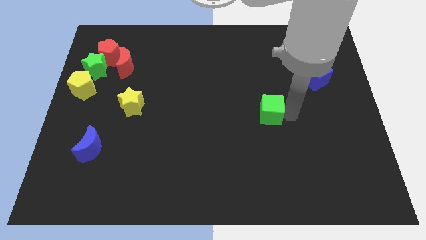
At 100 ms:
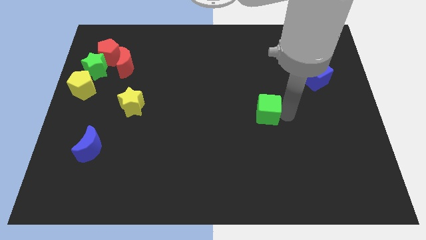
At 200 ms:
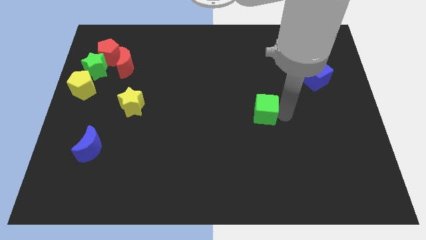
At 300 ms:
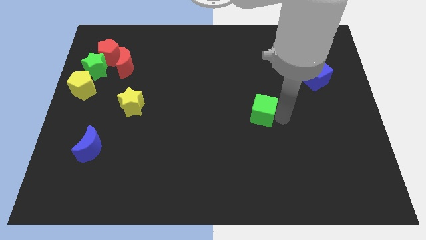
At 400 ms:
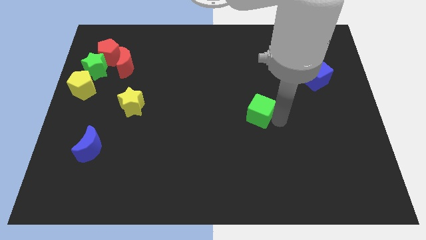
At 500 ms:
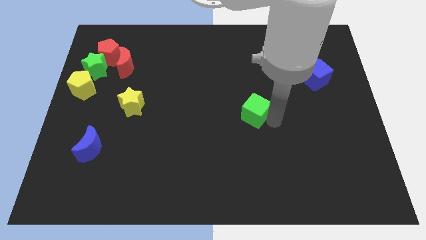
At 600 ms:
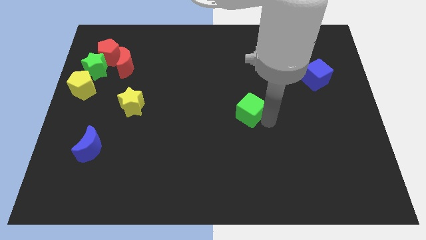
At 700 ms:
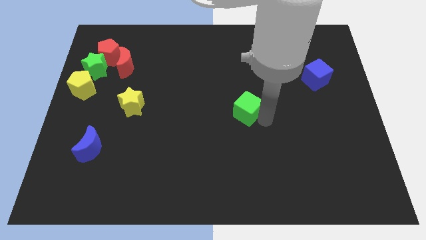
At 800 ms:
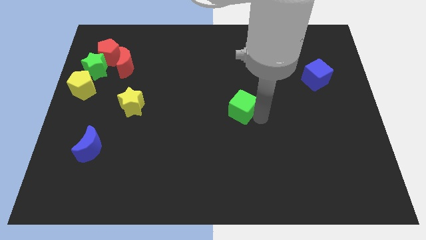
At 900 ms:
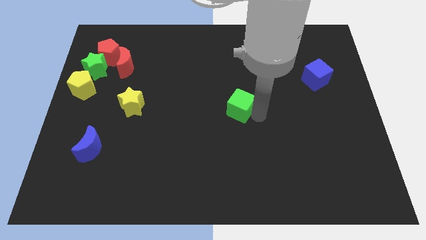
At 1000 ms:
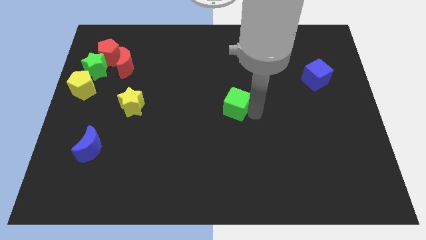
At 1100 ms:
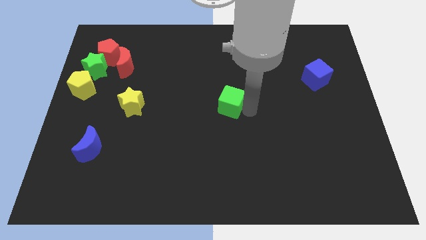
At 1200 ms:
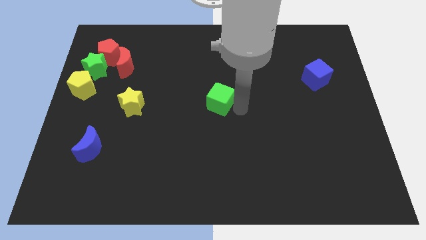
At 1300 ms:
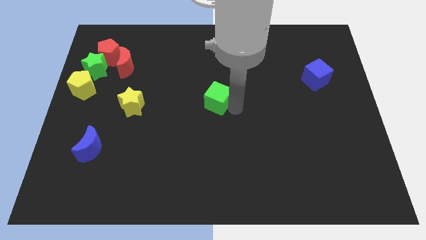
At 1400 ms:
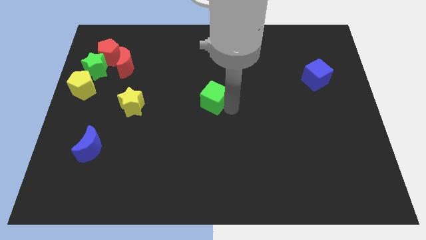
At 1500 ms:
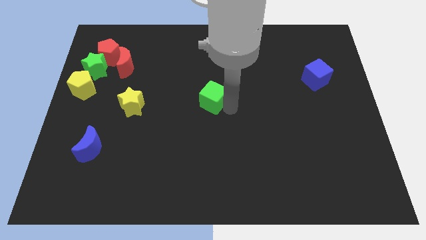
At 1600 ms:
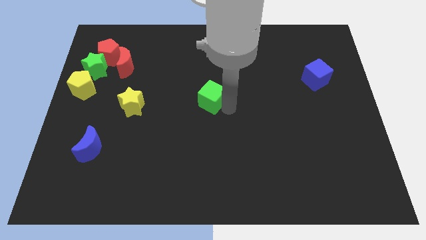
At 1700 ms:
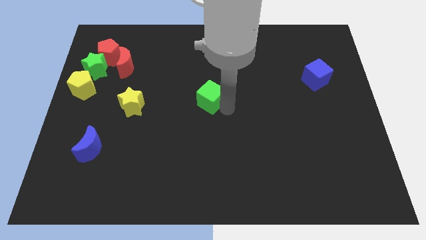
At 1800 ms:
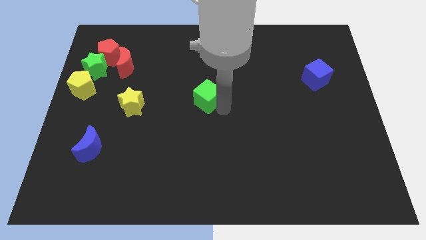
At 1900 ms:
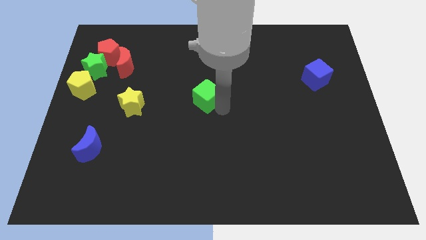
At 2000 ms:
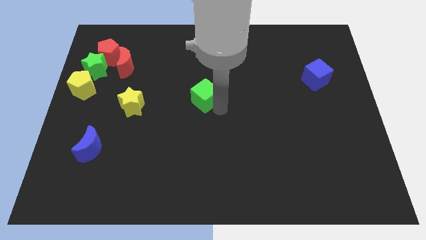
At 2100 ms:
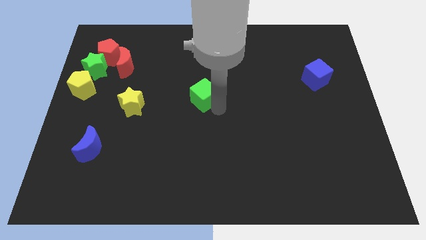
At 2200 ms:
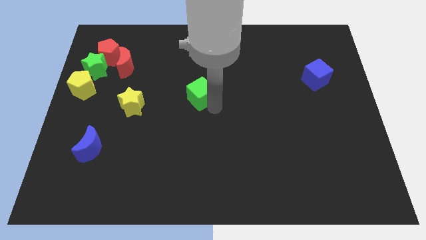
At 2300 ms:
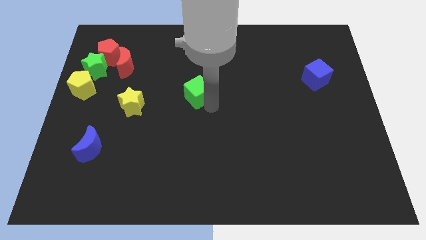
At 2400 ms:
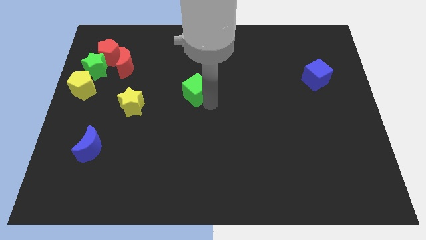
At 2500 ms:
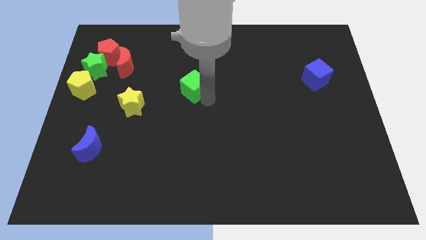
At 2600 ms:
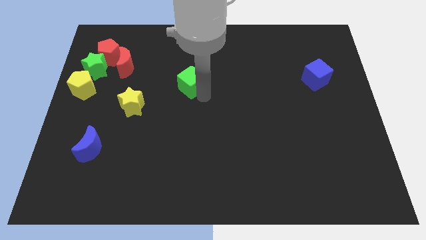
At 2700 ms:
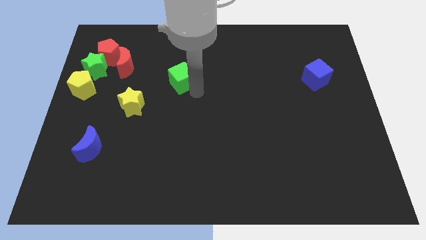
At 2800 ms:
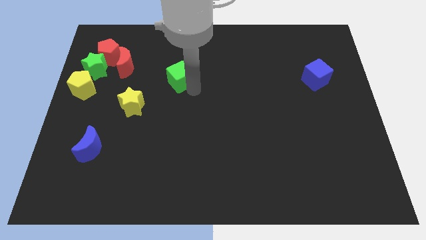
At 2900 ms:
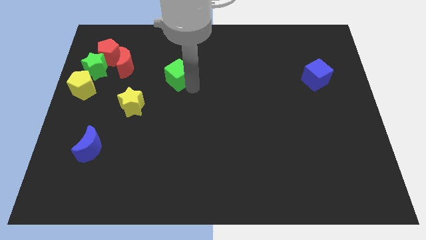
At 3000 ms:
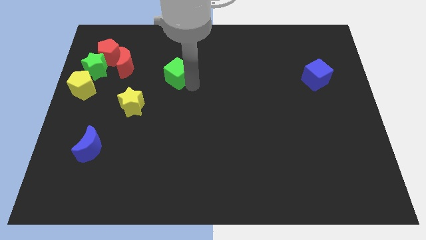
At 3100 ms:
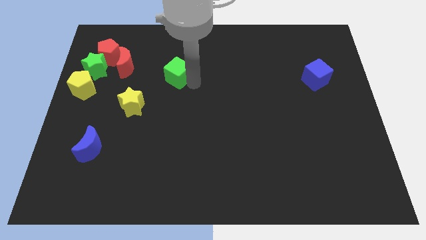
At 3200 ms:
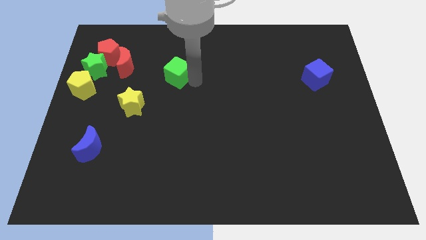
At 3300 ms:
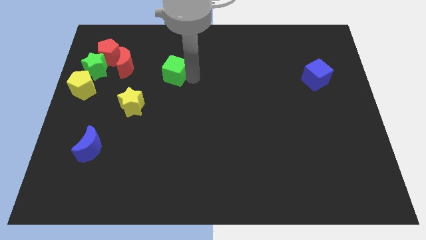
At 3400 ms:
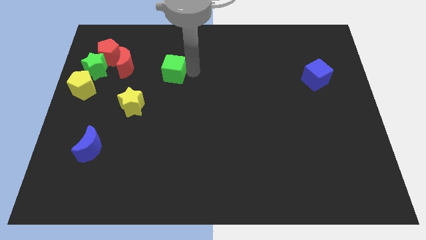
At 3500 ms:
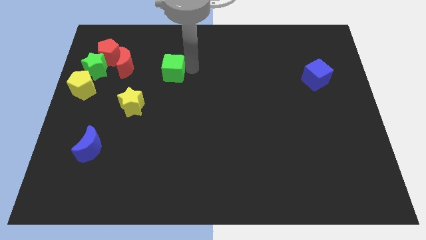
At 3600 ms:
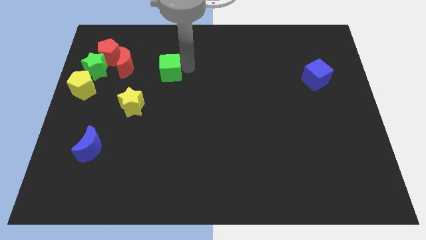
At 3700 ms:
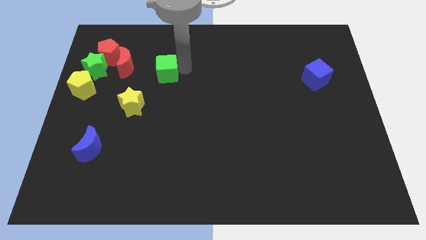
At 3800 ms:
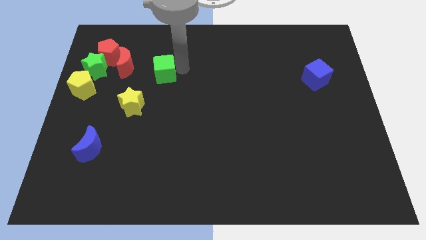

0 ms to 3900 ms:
push the green cube towards the yellow star

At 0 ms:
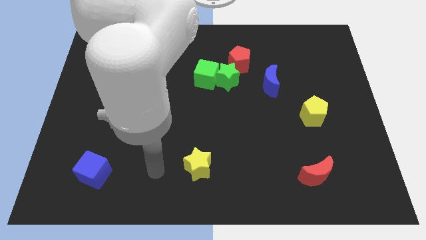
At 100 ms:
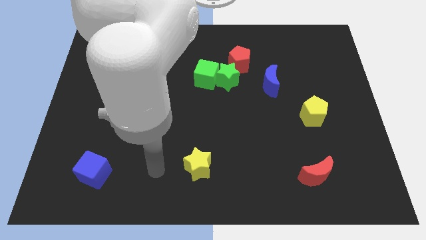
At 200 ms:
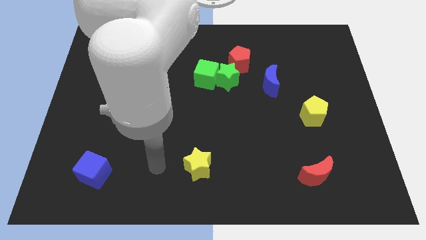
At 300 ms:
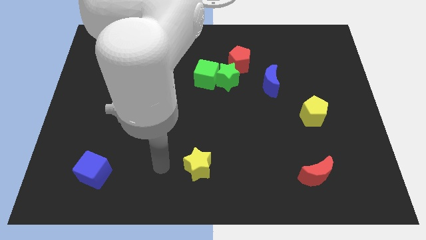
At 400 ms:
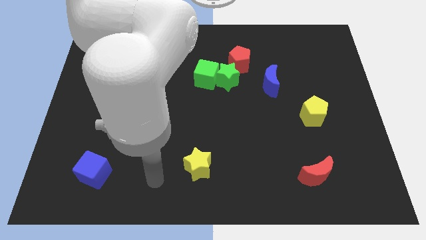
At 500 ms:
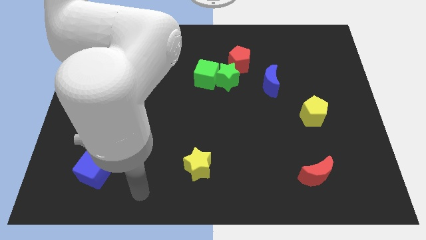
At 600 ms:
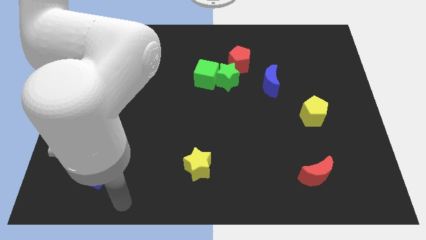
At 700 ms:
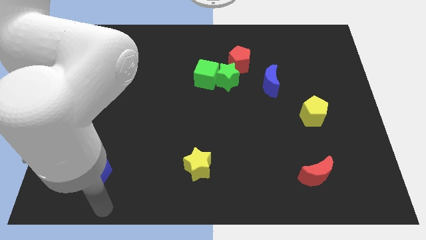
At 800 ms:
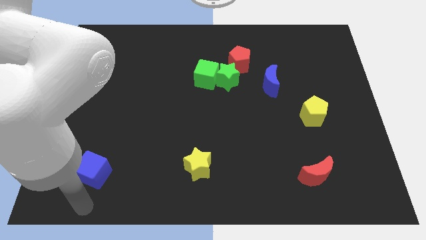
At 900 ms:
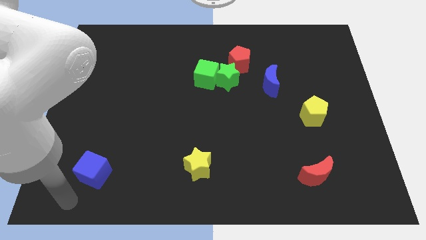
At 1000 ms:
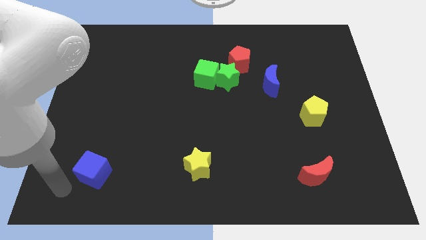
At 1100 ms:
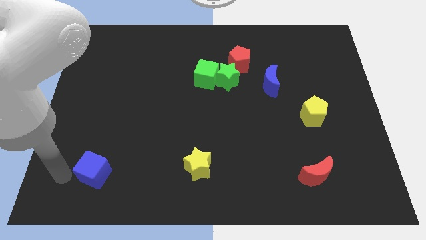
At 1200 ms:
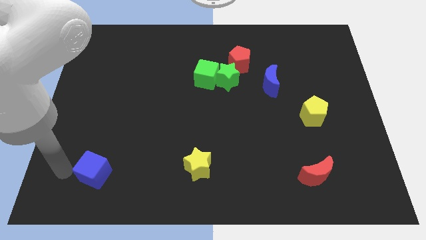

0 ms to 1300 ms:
place your arm at the left of the blue cube

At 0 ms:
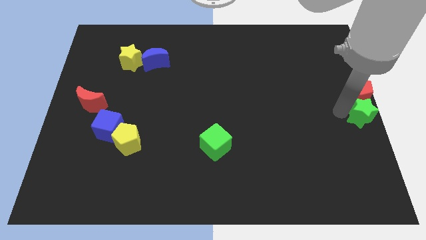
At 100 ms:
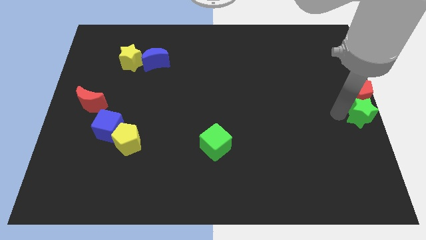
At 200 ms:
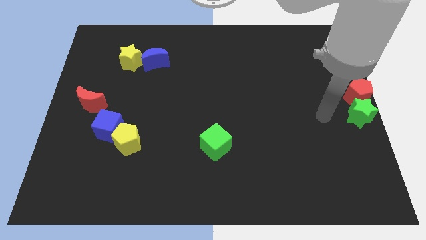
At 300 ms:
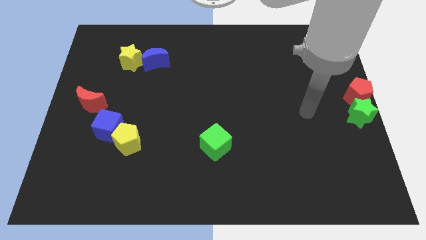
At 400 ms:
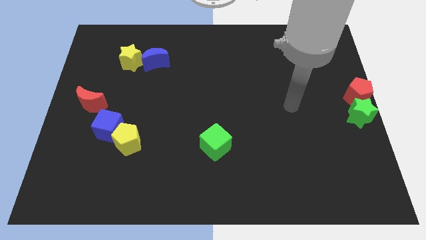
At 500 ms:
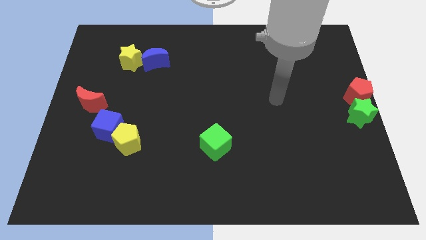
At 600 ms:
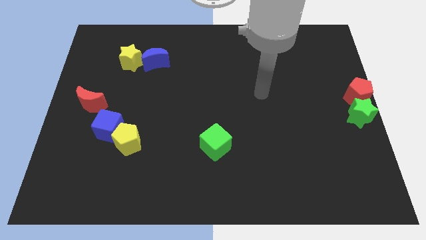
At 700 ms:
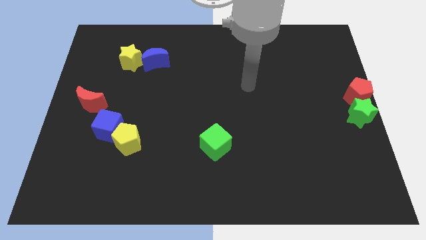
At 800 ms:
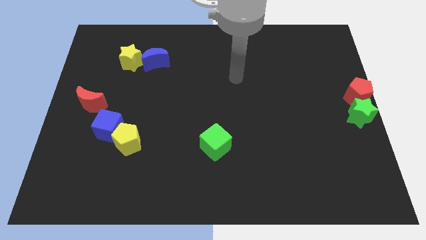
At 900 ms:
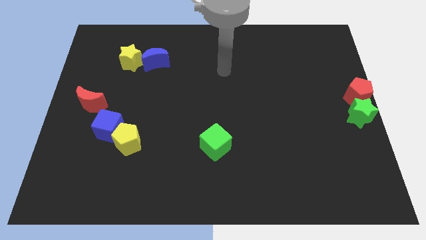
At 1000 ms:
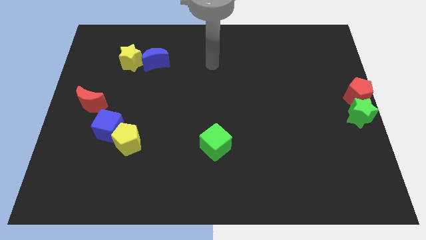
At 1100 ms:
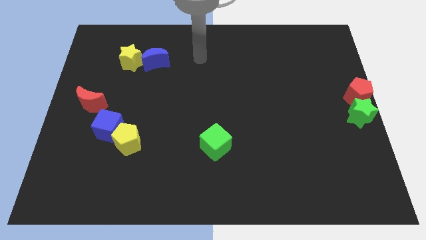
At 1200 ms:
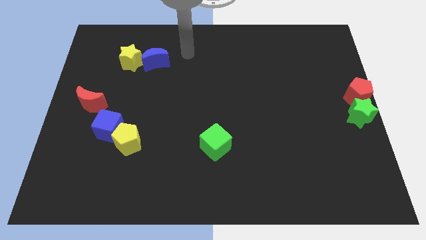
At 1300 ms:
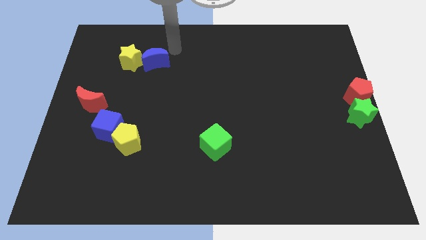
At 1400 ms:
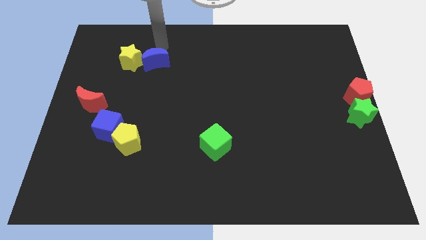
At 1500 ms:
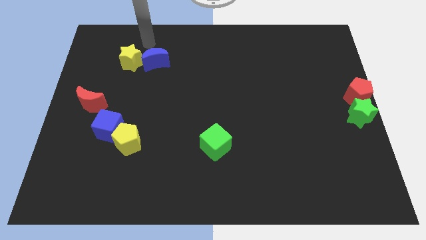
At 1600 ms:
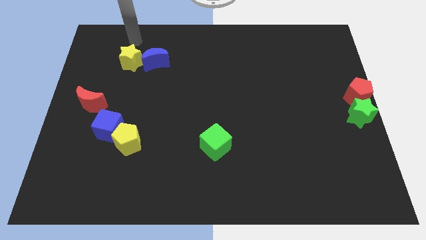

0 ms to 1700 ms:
point your arm at the top of the blue crescent

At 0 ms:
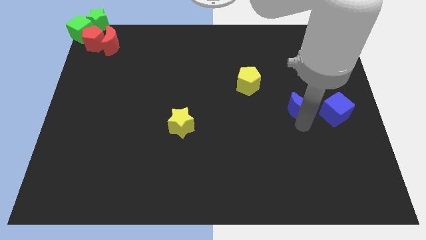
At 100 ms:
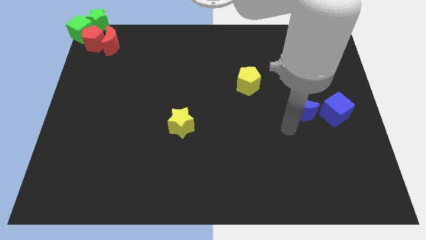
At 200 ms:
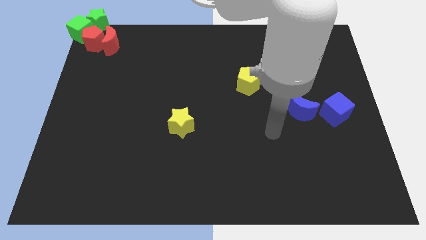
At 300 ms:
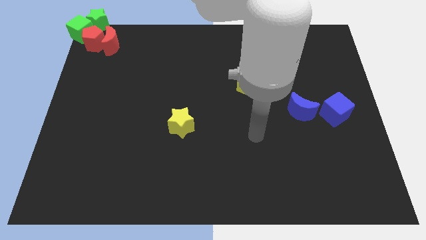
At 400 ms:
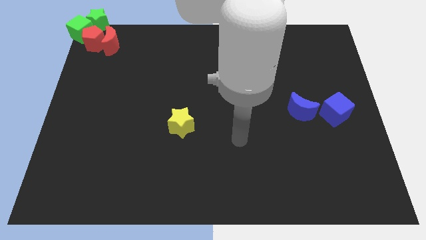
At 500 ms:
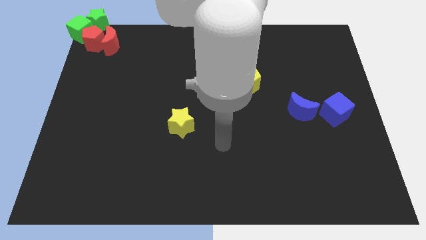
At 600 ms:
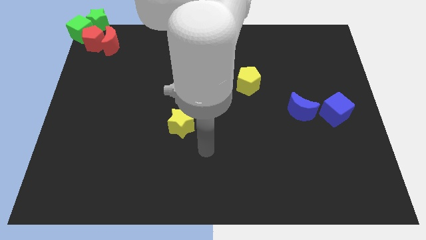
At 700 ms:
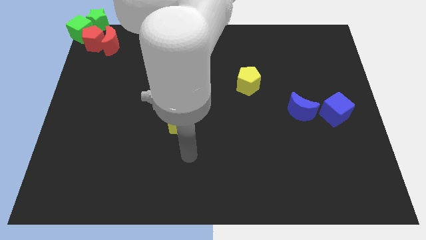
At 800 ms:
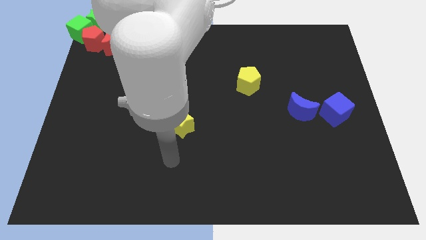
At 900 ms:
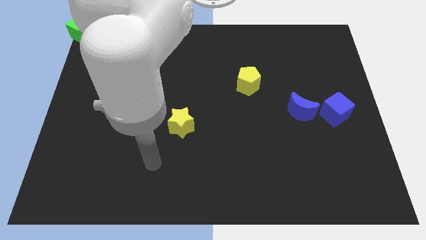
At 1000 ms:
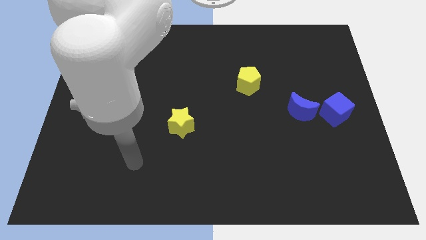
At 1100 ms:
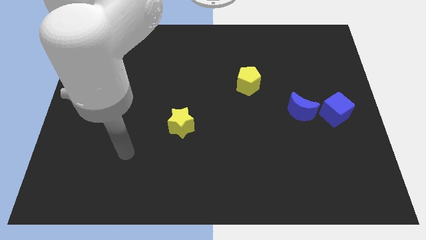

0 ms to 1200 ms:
move your arm away from the blue crescent

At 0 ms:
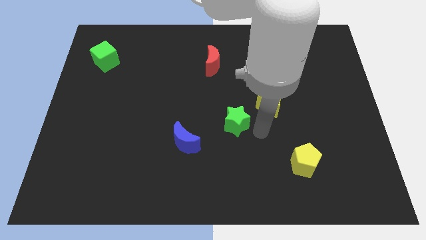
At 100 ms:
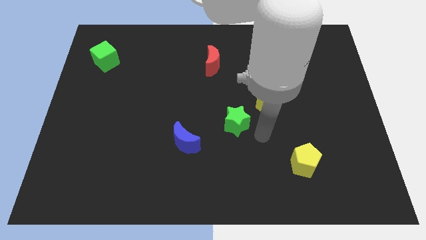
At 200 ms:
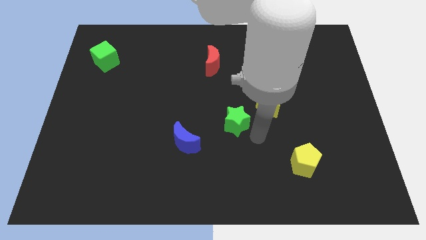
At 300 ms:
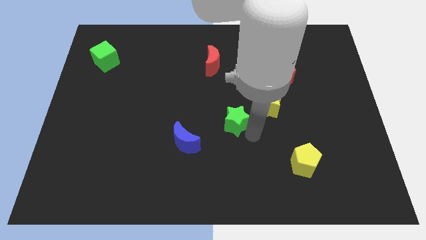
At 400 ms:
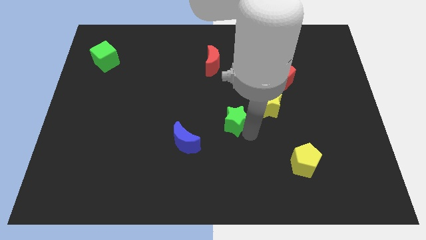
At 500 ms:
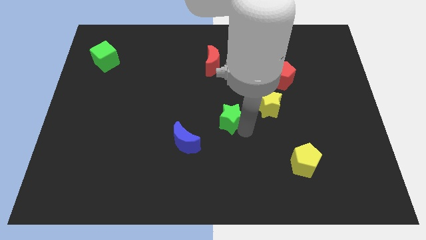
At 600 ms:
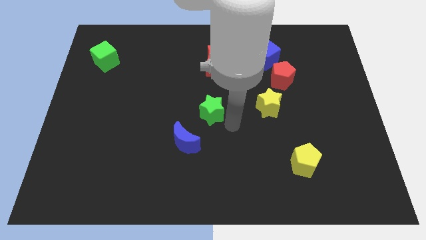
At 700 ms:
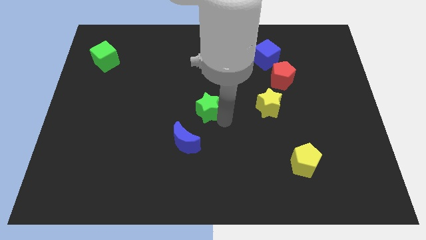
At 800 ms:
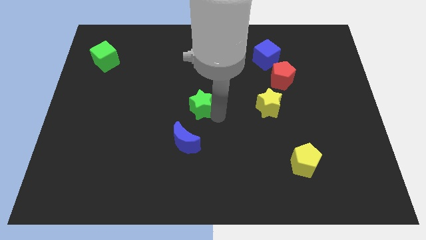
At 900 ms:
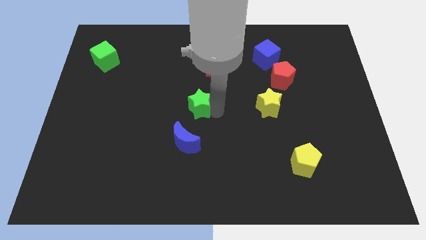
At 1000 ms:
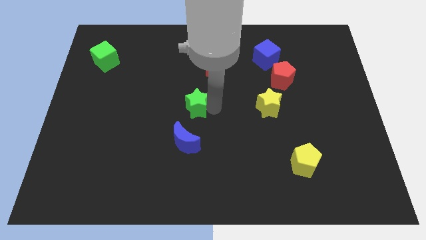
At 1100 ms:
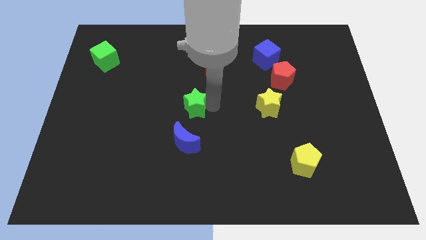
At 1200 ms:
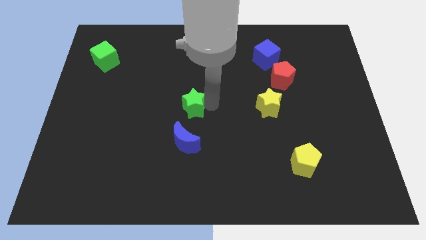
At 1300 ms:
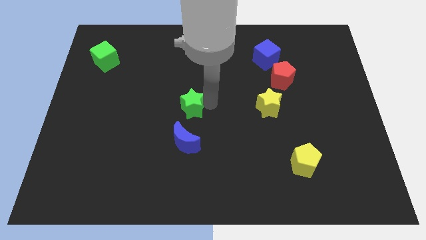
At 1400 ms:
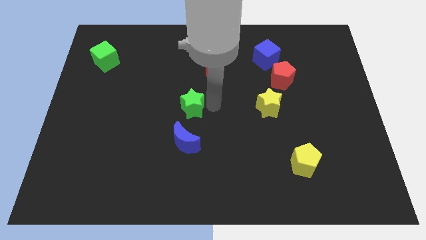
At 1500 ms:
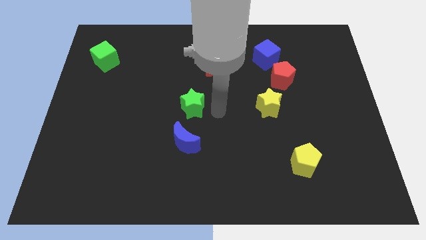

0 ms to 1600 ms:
place the green star at the top of the blue crescent
